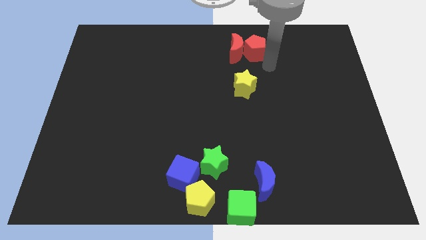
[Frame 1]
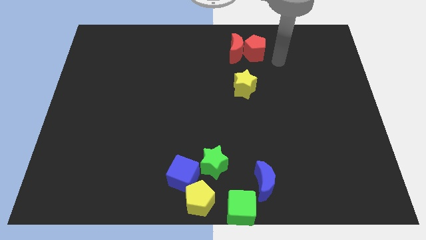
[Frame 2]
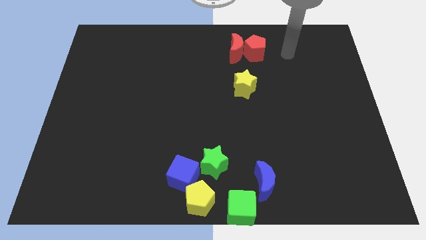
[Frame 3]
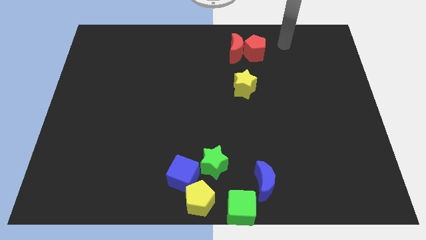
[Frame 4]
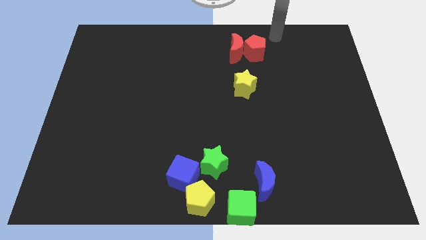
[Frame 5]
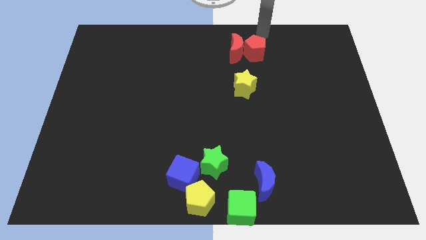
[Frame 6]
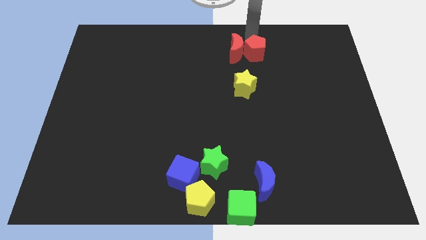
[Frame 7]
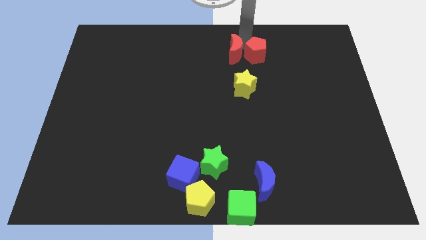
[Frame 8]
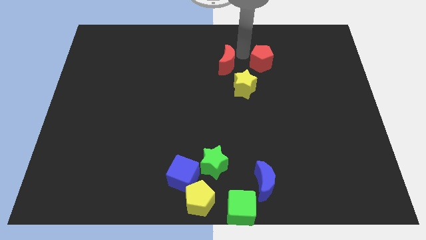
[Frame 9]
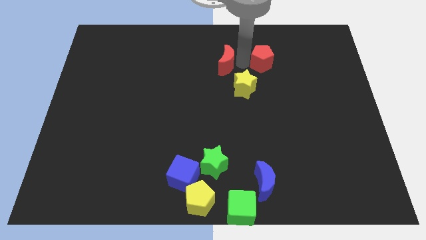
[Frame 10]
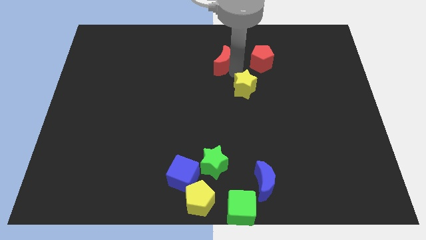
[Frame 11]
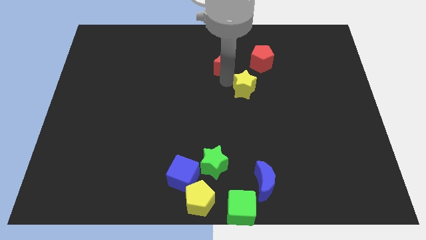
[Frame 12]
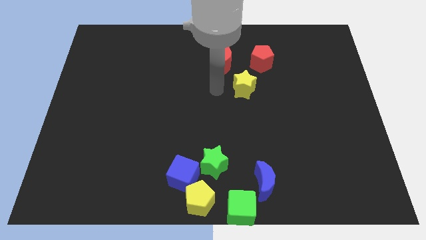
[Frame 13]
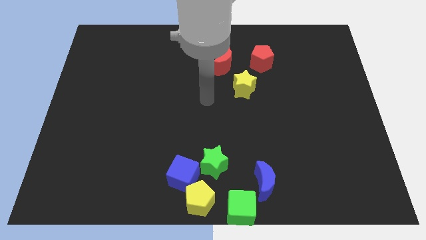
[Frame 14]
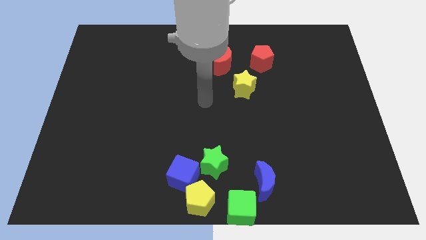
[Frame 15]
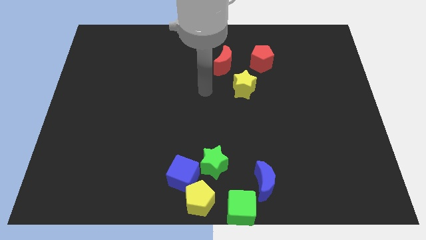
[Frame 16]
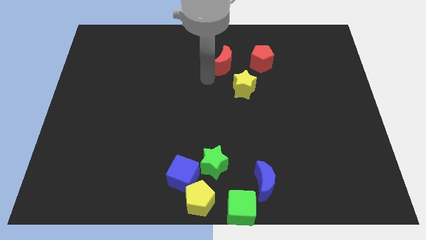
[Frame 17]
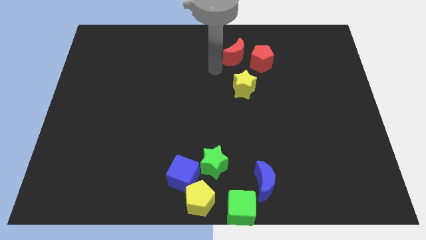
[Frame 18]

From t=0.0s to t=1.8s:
separate red pentagon from red crescent

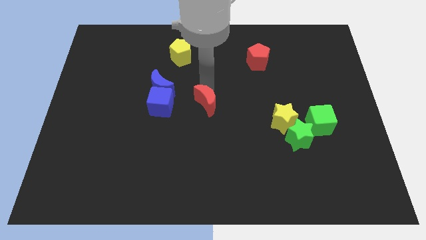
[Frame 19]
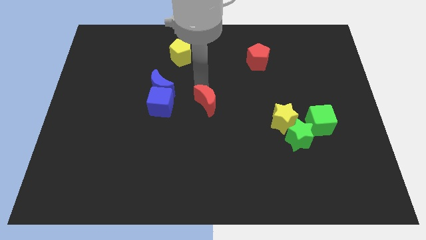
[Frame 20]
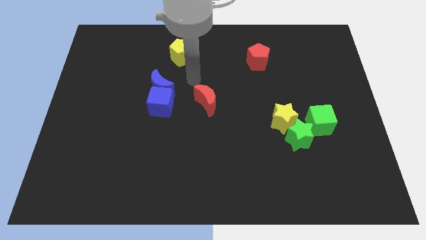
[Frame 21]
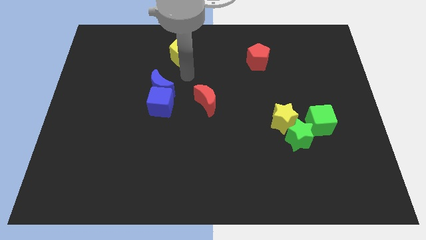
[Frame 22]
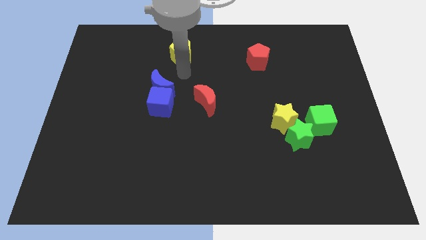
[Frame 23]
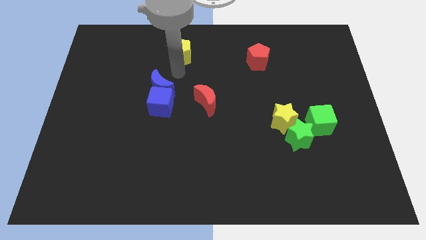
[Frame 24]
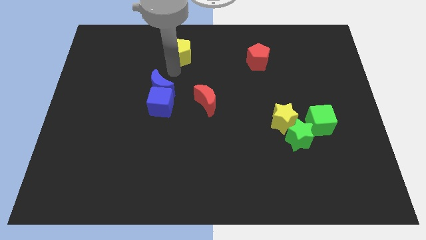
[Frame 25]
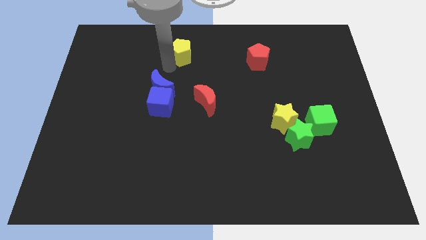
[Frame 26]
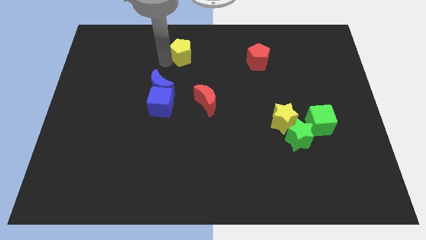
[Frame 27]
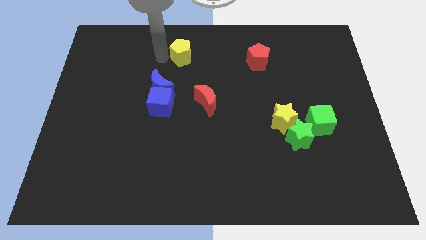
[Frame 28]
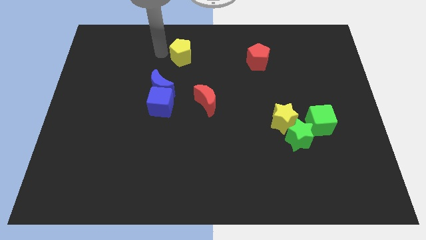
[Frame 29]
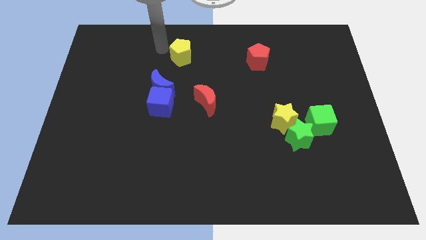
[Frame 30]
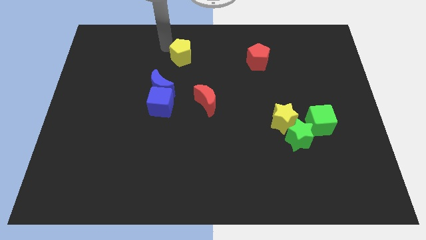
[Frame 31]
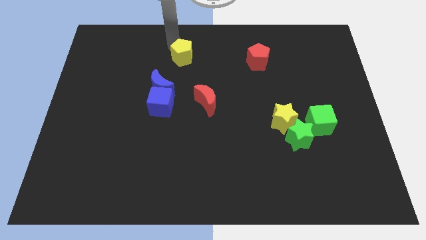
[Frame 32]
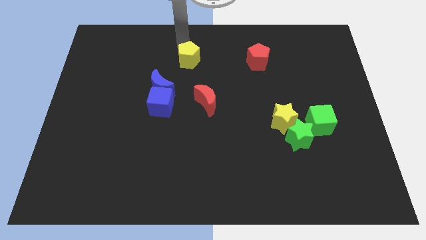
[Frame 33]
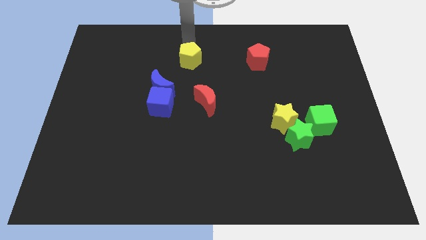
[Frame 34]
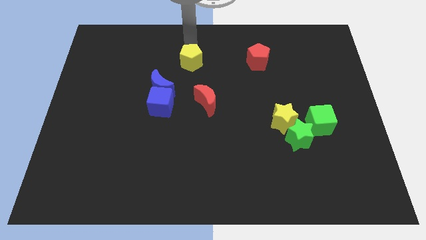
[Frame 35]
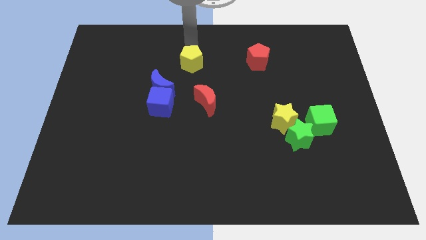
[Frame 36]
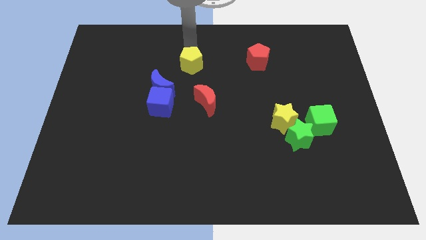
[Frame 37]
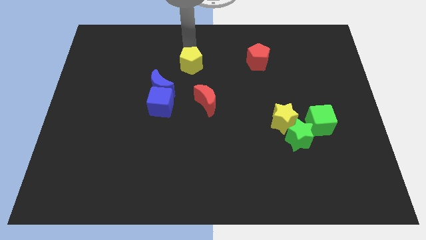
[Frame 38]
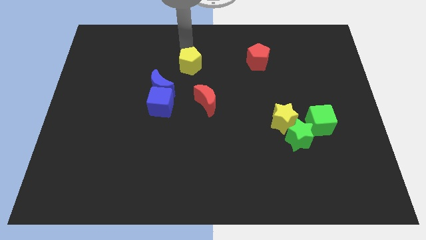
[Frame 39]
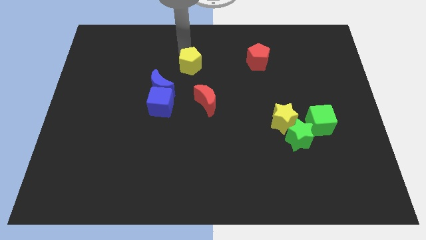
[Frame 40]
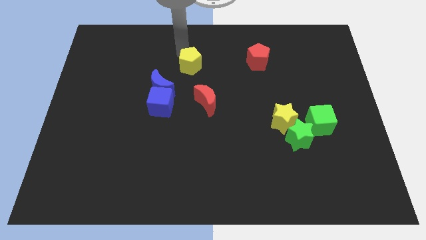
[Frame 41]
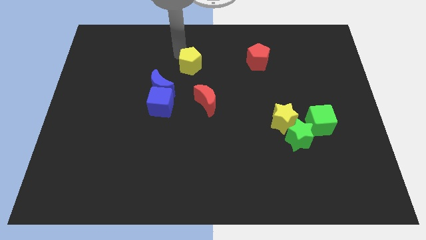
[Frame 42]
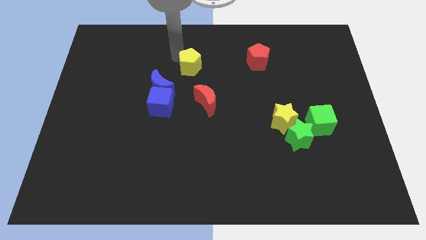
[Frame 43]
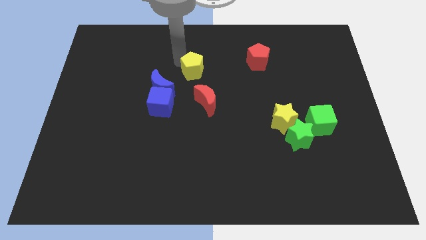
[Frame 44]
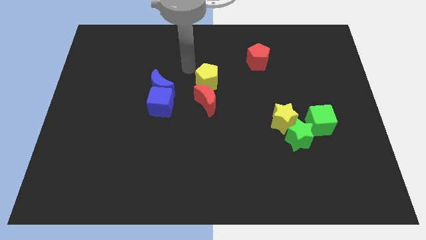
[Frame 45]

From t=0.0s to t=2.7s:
put the yellow pentagon at the top of red moon

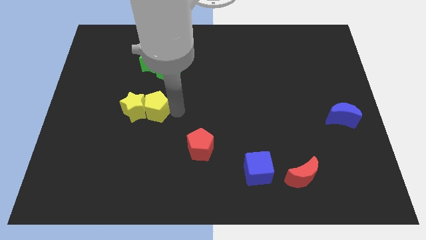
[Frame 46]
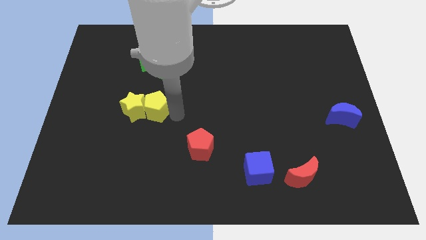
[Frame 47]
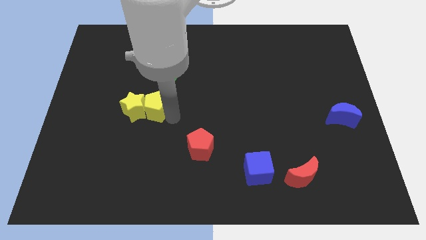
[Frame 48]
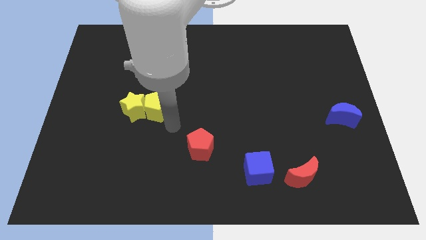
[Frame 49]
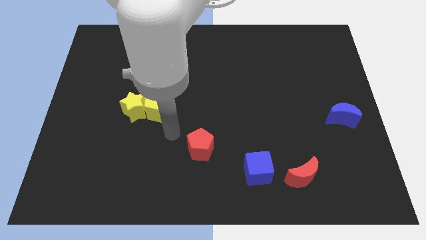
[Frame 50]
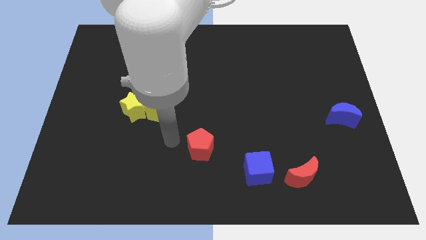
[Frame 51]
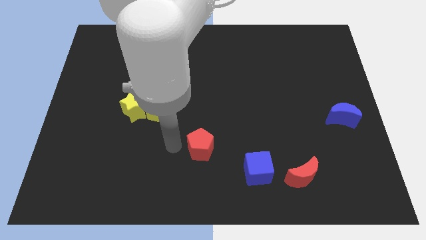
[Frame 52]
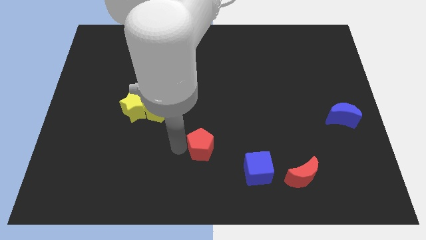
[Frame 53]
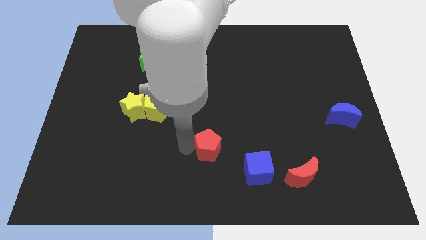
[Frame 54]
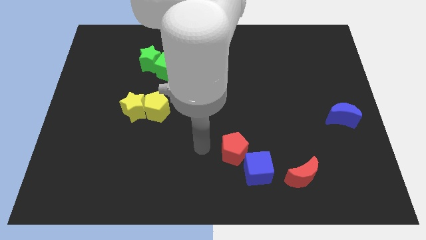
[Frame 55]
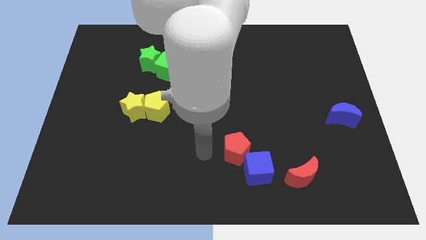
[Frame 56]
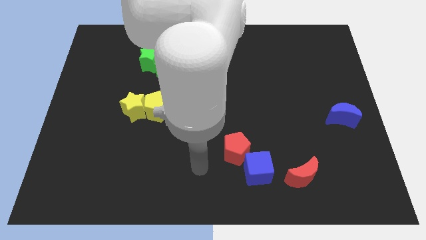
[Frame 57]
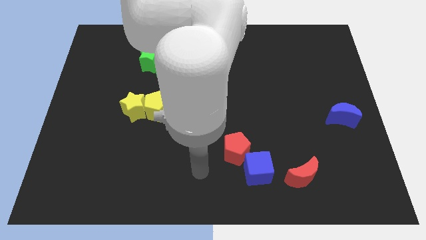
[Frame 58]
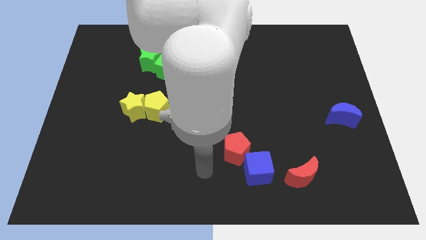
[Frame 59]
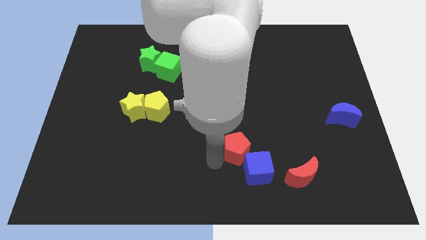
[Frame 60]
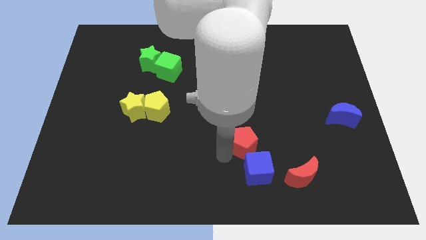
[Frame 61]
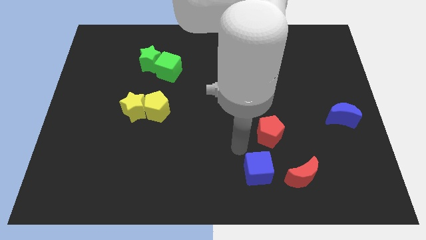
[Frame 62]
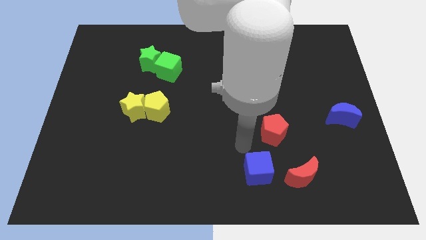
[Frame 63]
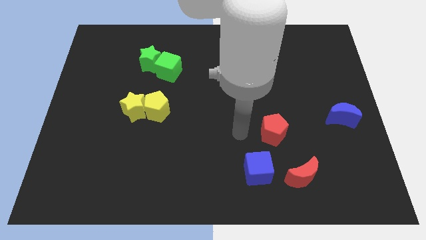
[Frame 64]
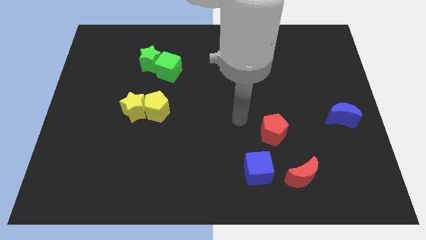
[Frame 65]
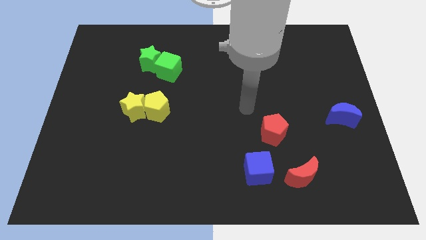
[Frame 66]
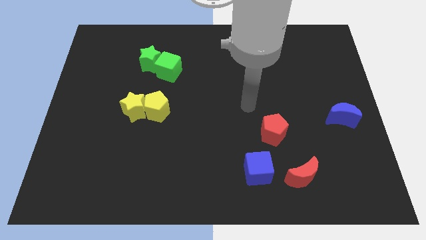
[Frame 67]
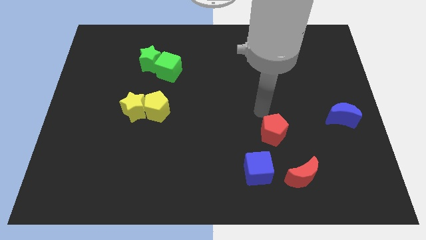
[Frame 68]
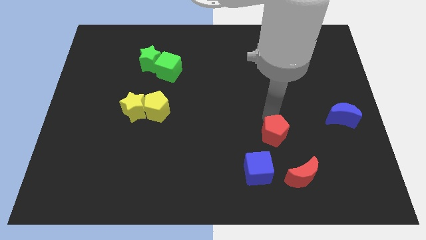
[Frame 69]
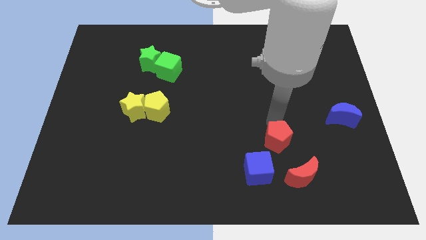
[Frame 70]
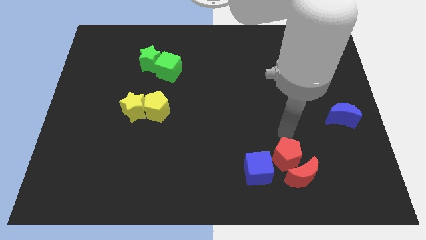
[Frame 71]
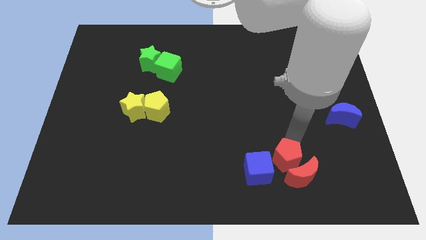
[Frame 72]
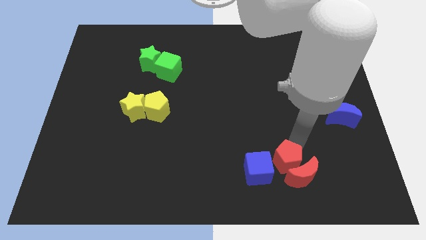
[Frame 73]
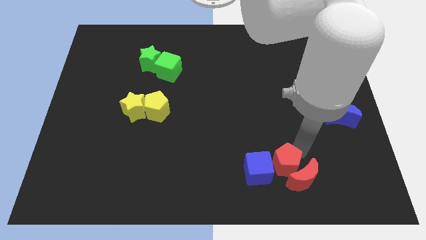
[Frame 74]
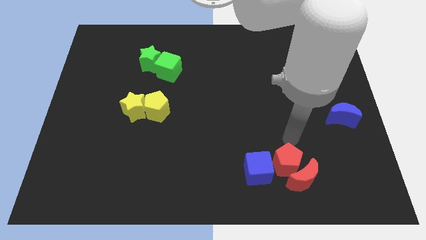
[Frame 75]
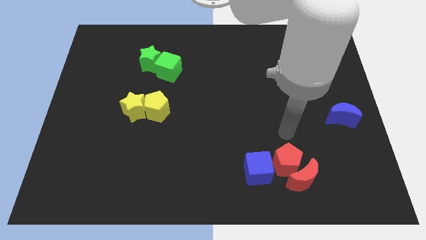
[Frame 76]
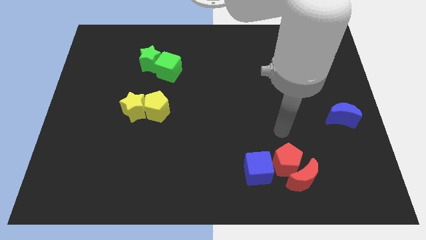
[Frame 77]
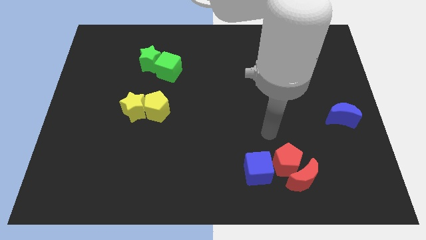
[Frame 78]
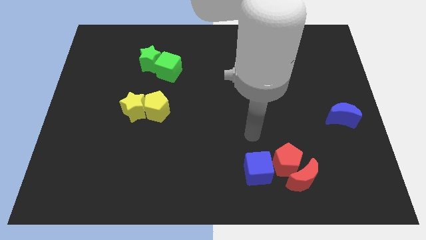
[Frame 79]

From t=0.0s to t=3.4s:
push the red pentagon towards the right side of the blue cube

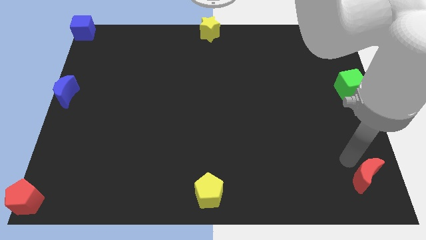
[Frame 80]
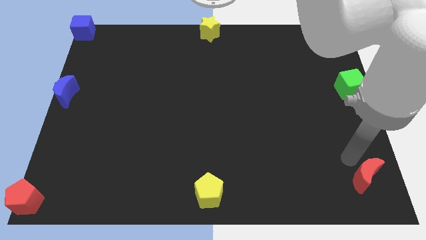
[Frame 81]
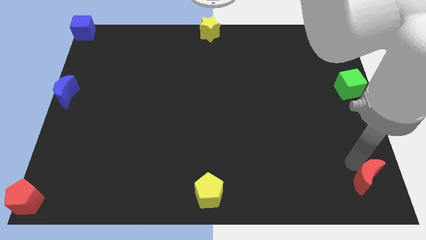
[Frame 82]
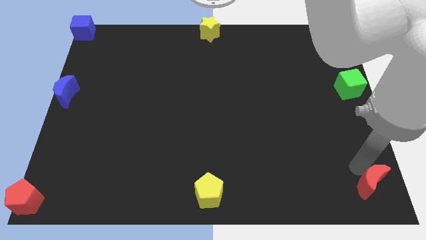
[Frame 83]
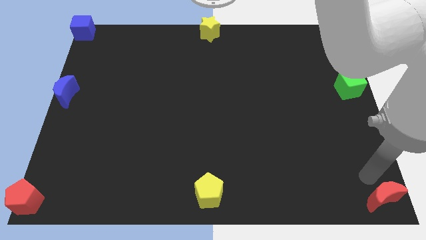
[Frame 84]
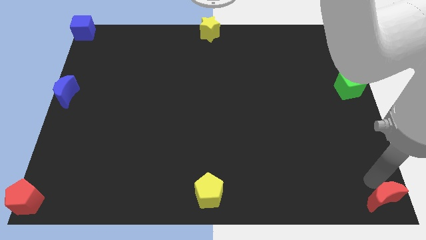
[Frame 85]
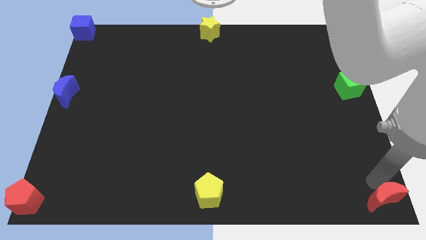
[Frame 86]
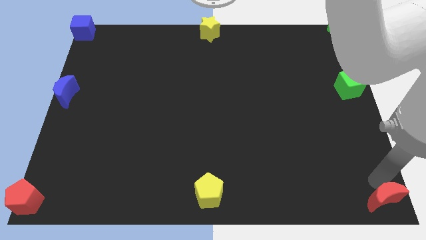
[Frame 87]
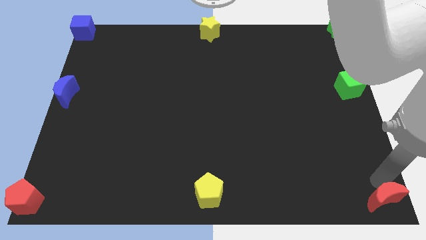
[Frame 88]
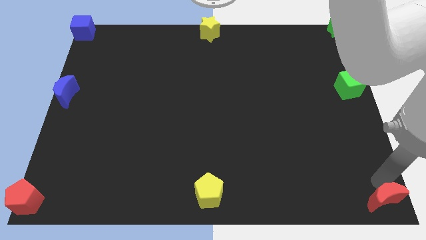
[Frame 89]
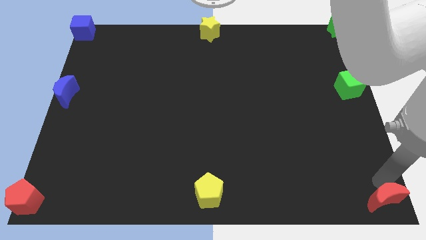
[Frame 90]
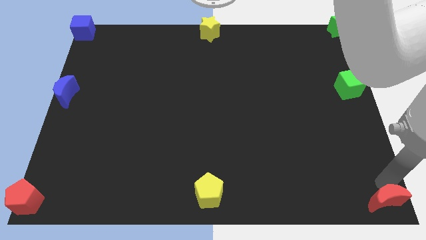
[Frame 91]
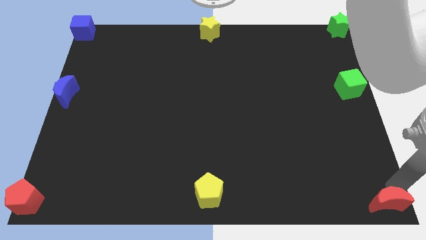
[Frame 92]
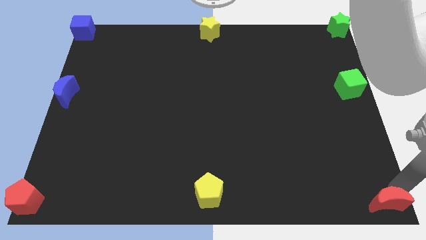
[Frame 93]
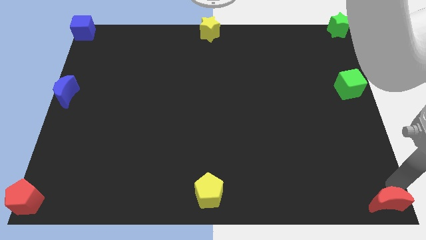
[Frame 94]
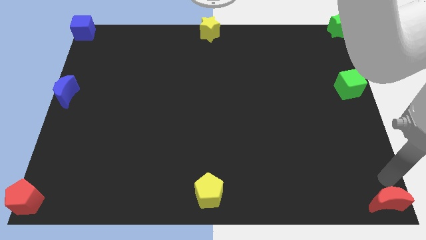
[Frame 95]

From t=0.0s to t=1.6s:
move the red moon to the bottom right side
